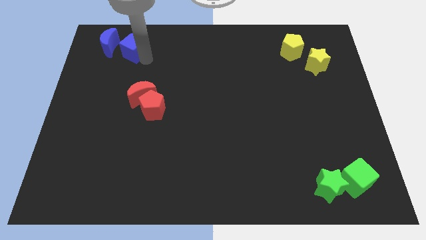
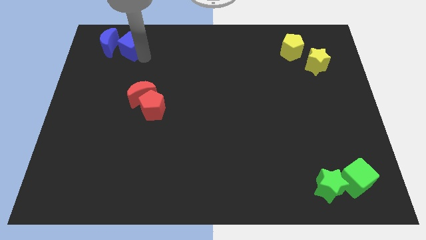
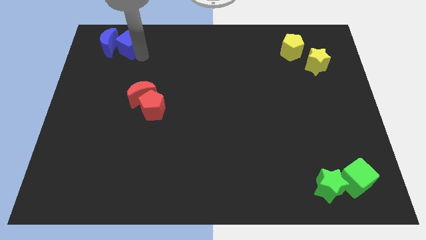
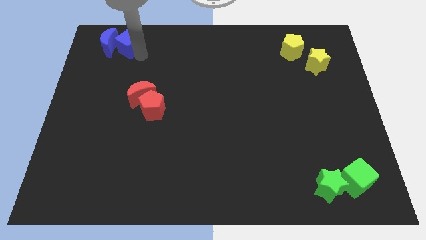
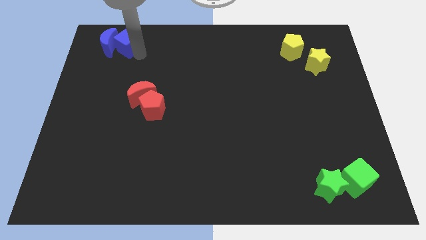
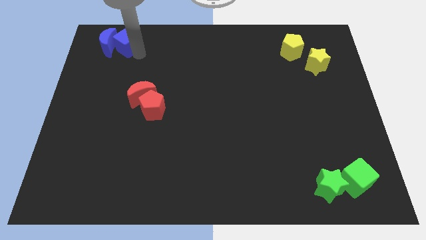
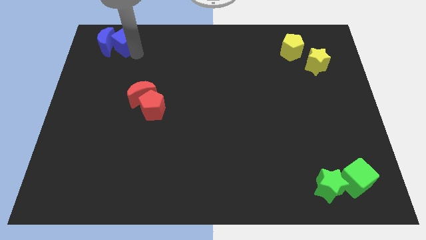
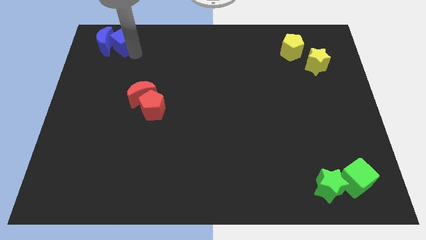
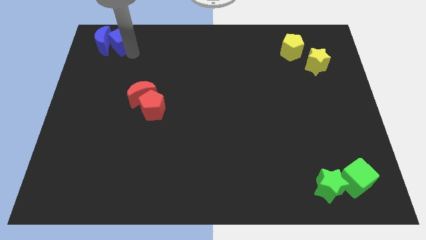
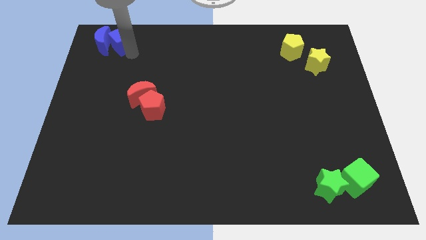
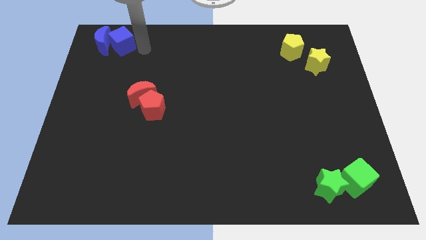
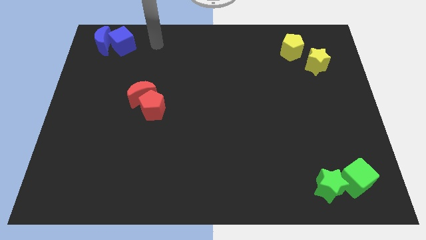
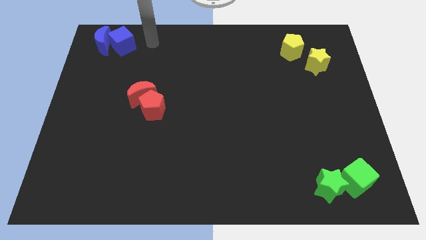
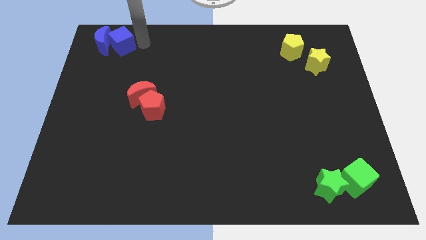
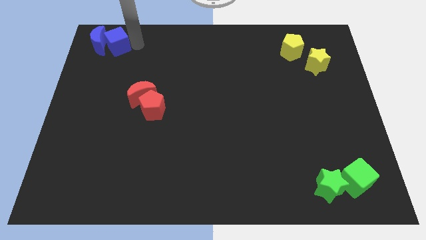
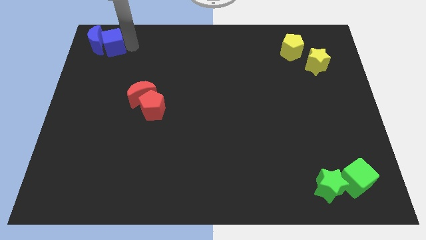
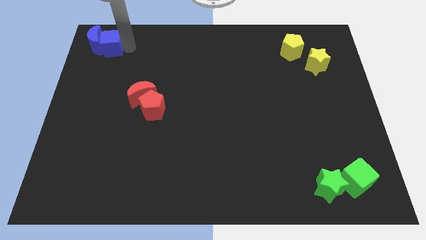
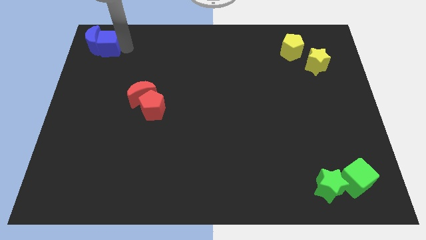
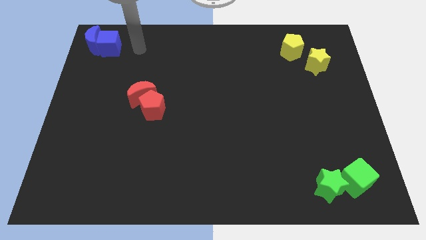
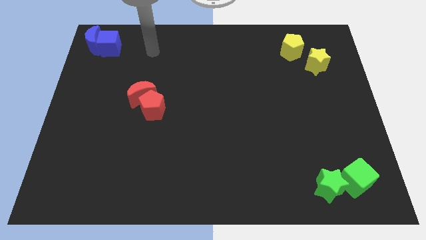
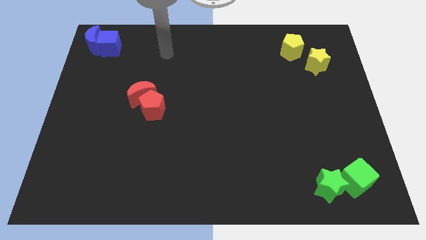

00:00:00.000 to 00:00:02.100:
push the blue cube into blue crescent

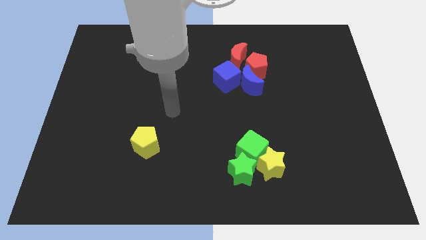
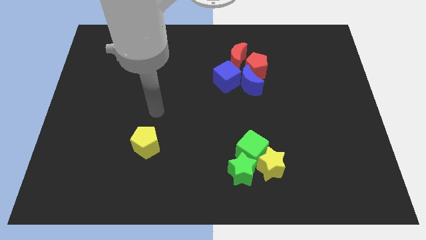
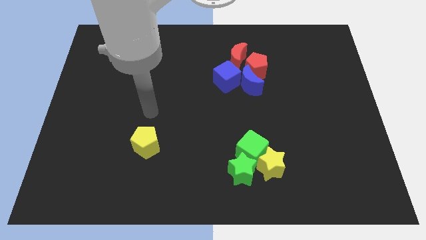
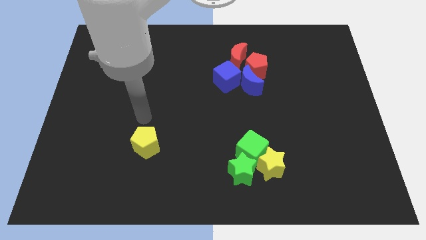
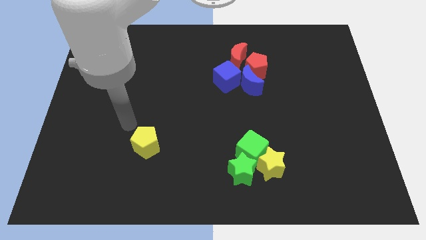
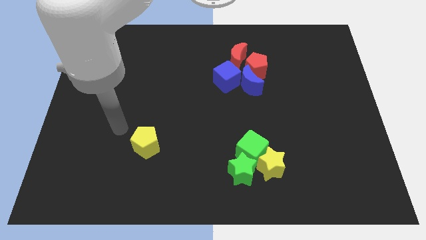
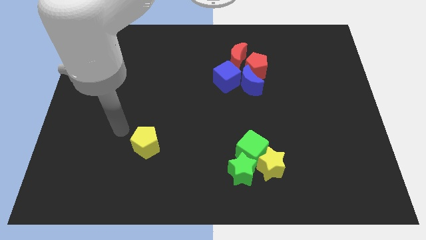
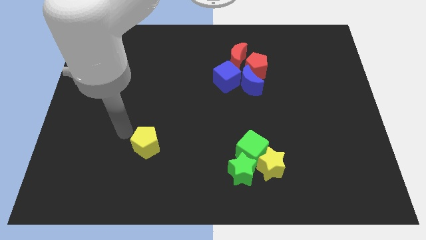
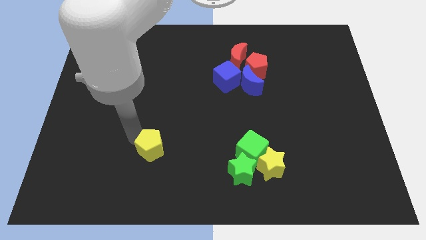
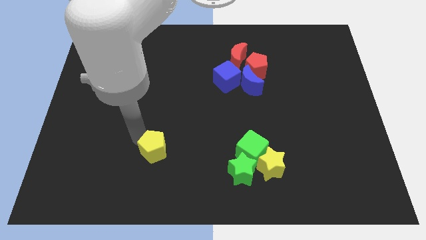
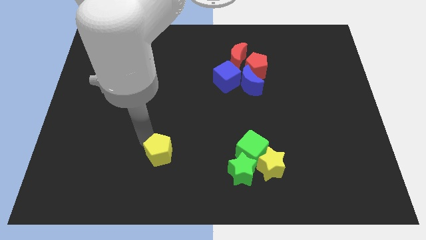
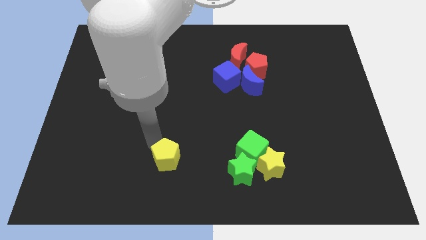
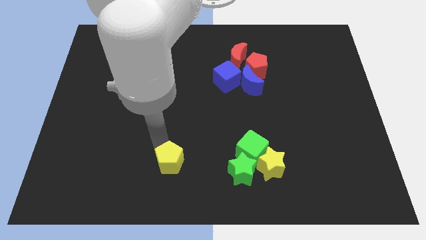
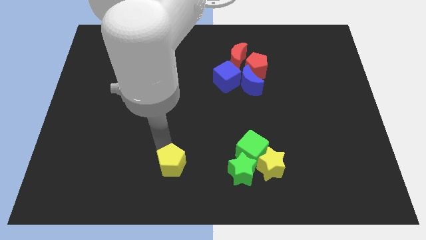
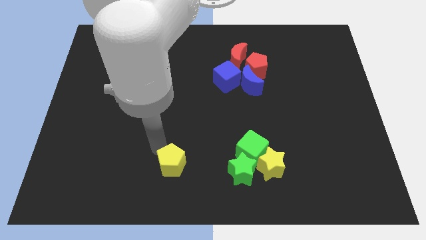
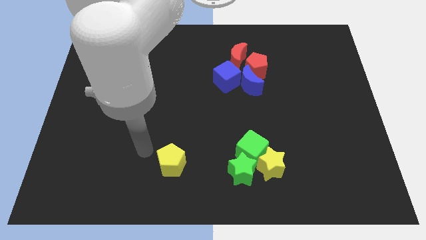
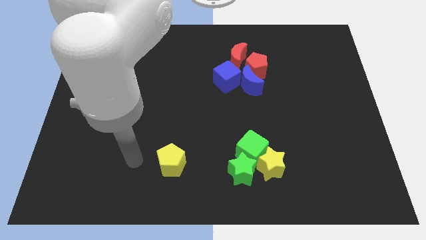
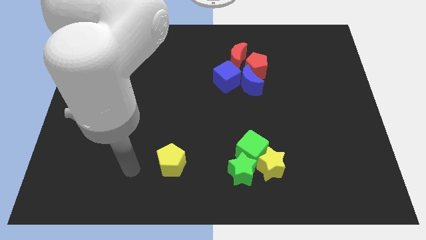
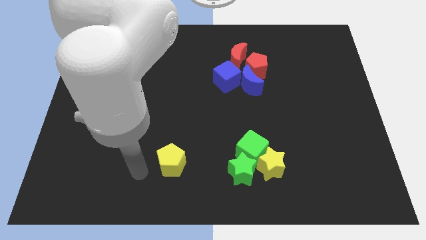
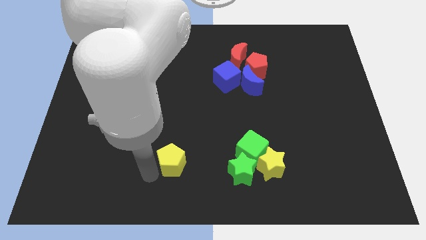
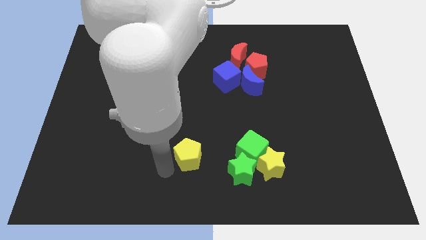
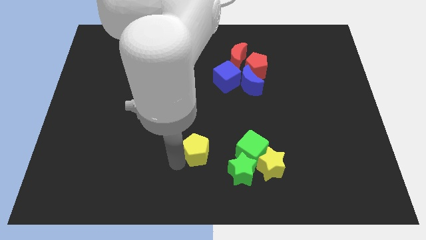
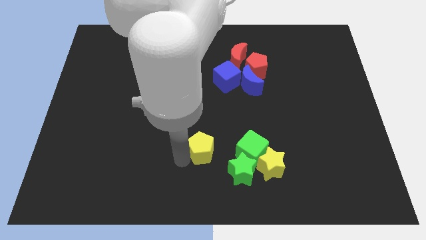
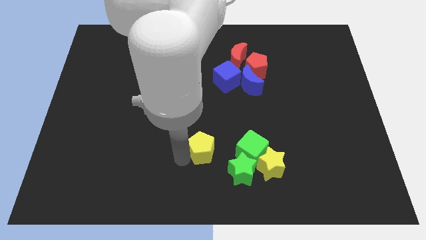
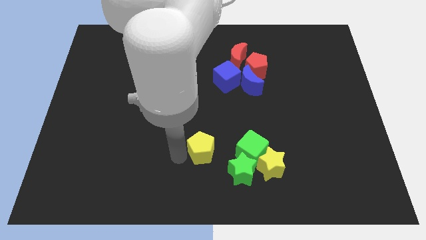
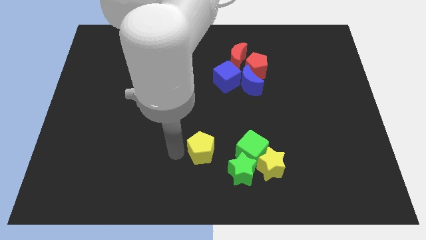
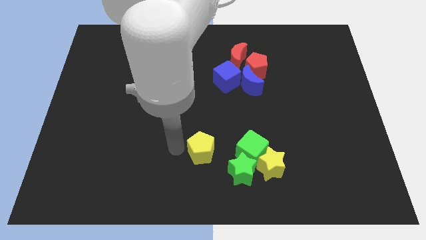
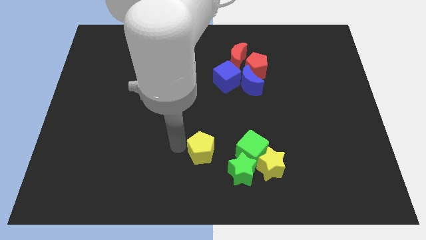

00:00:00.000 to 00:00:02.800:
place the yellow pentagon left to the green cube

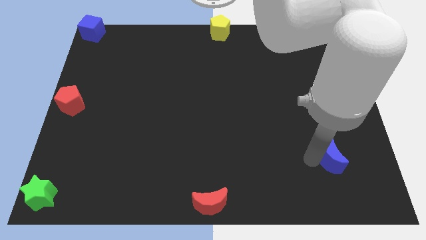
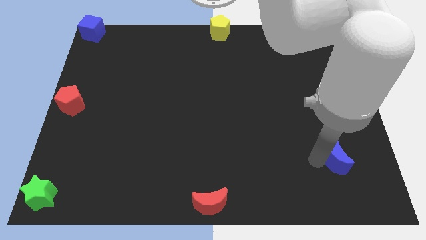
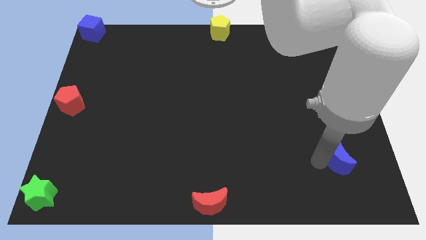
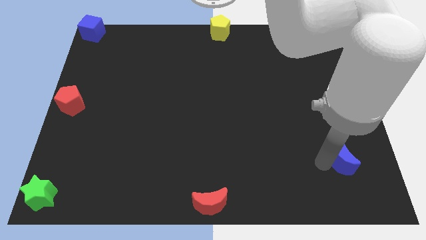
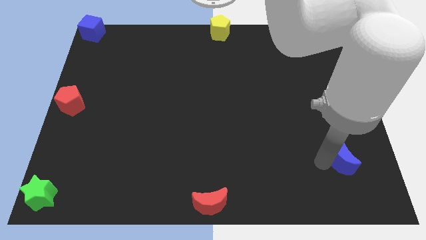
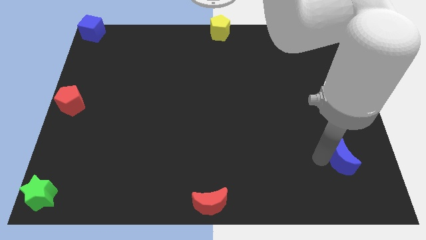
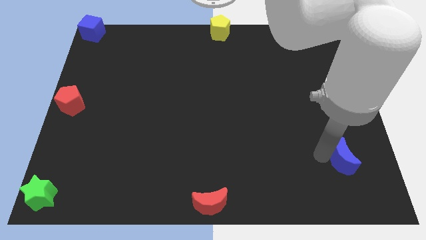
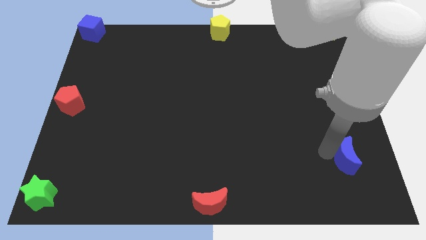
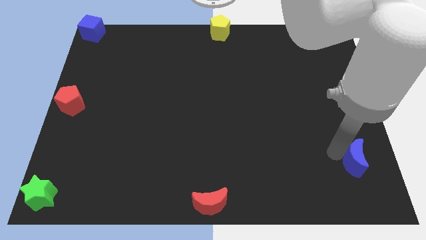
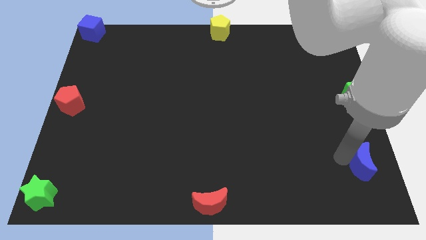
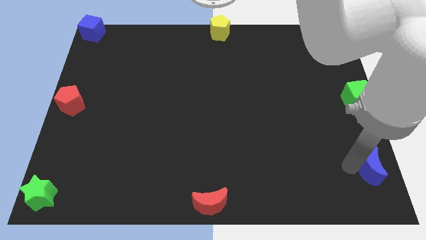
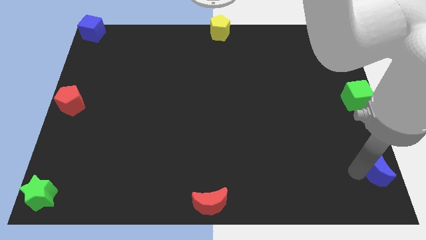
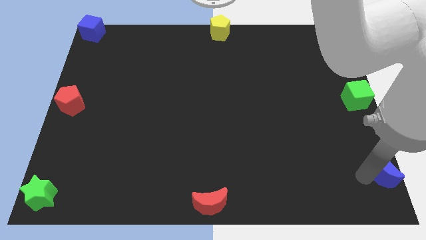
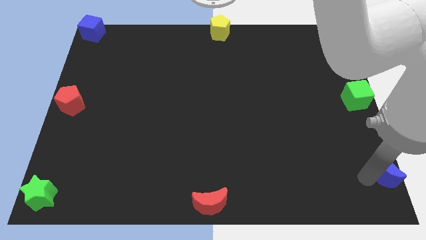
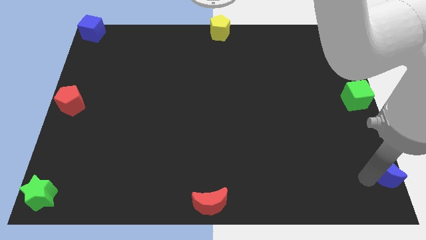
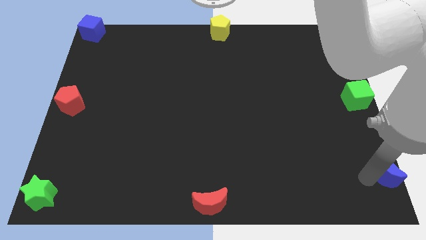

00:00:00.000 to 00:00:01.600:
place the blue moon underneath the green cube

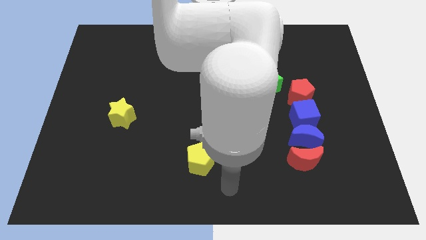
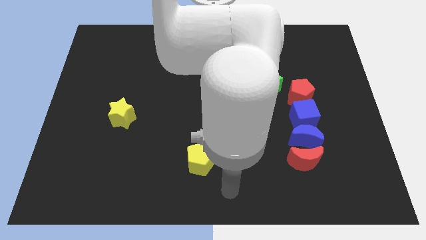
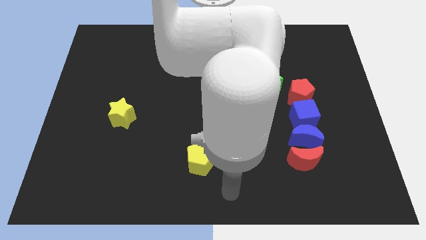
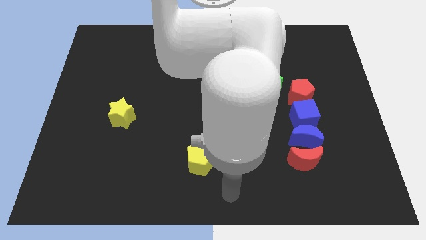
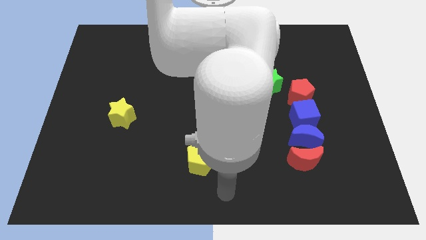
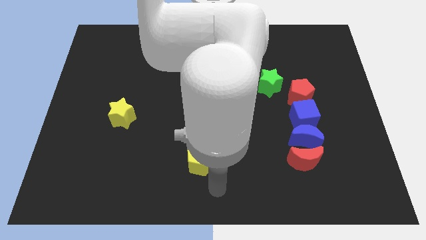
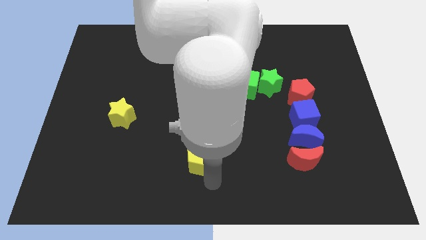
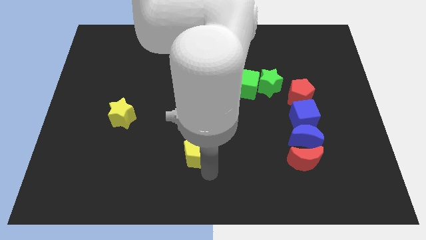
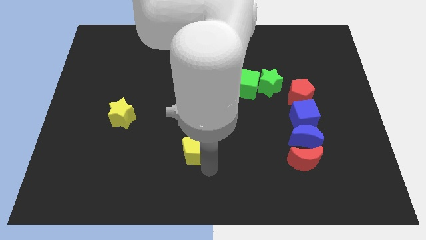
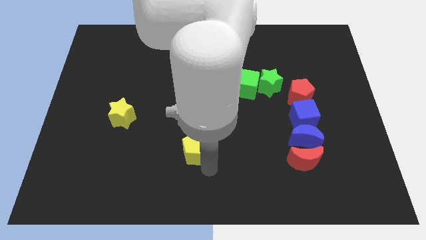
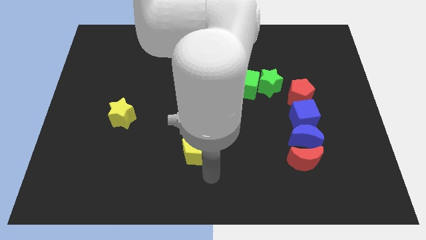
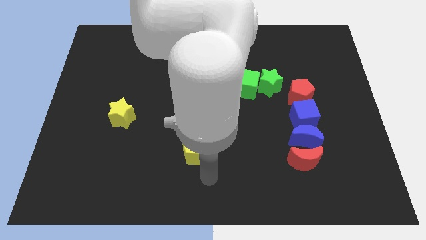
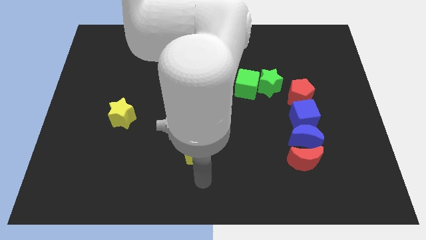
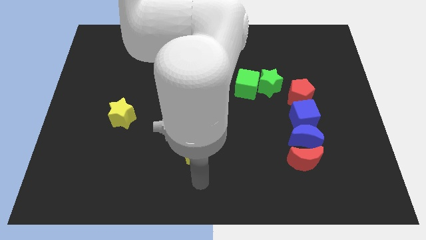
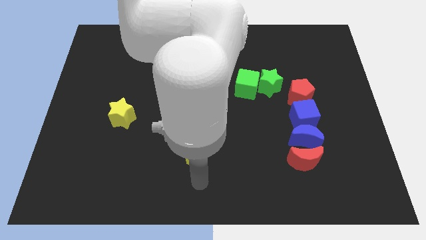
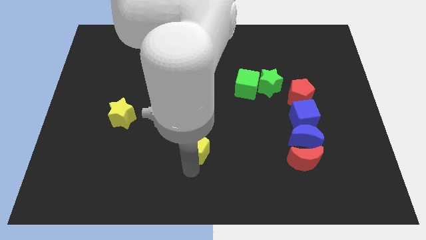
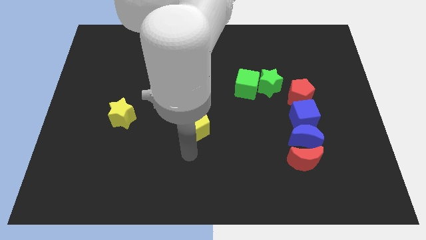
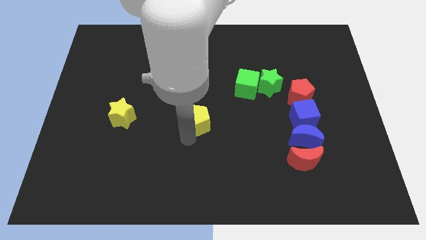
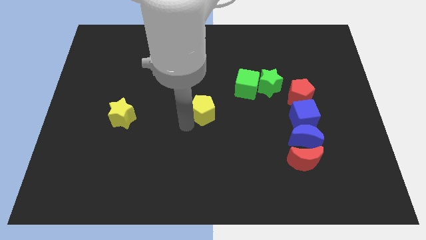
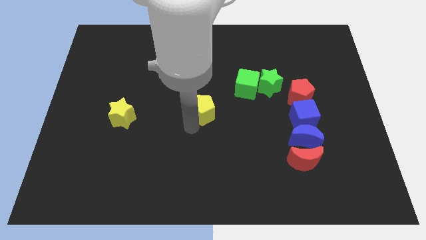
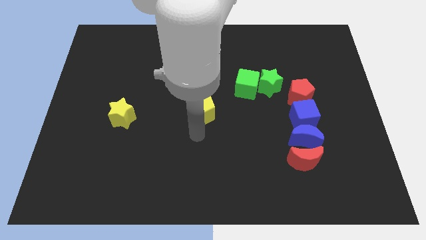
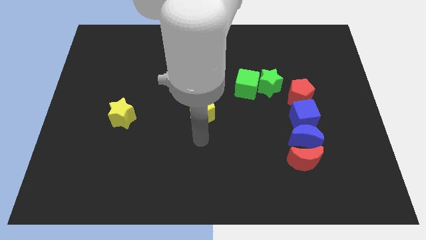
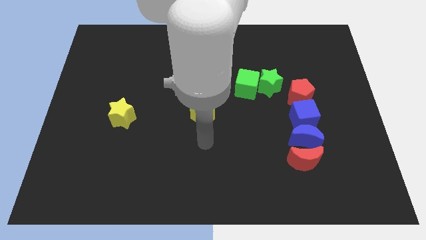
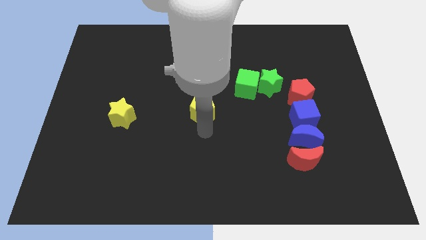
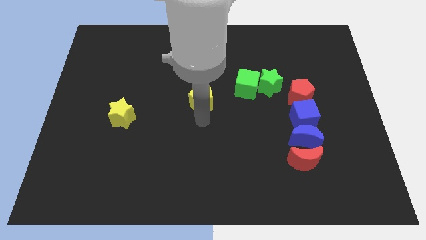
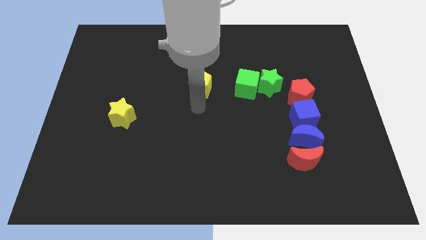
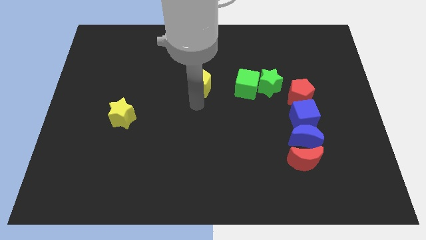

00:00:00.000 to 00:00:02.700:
move the yellow pentagon left to the green cube
